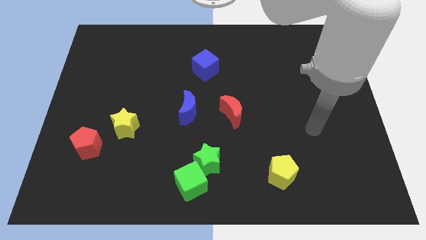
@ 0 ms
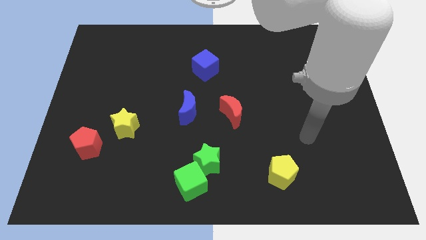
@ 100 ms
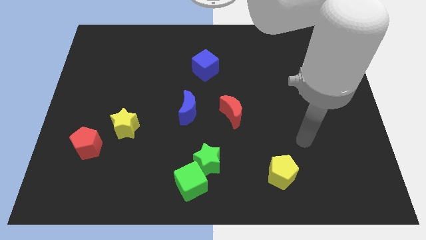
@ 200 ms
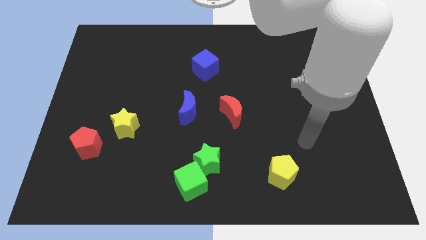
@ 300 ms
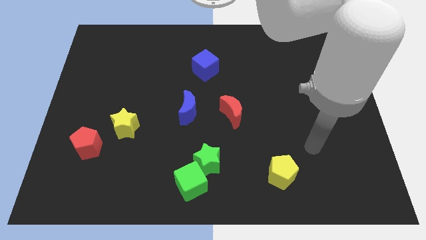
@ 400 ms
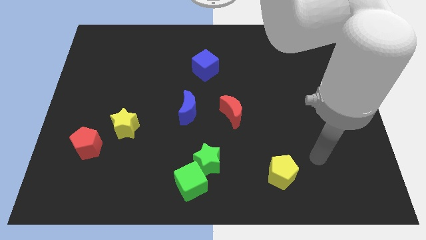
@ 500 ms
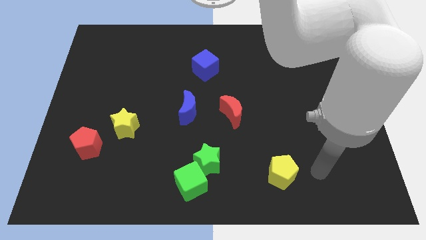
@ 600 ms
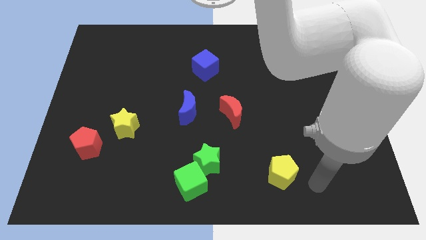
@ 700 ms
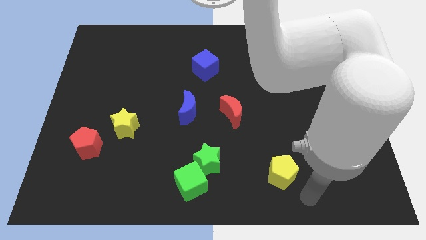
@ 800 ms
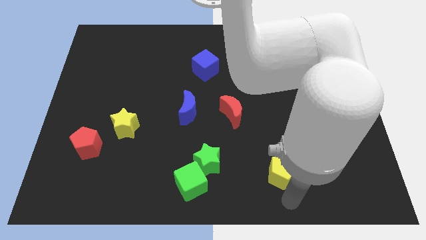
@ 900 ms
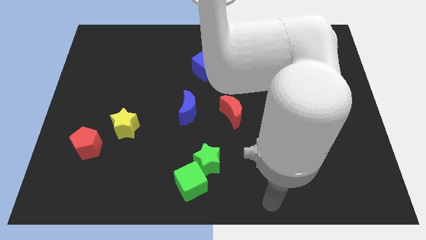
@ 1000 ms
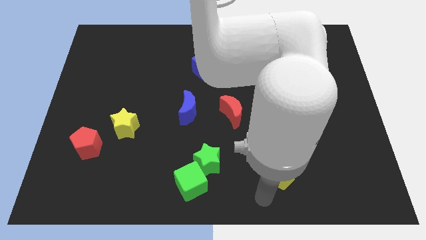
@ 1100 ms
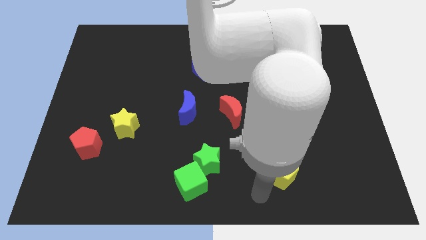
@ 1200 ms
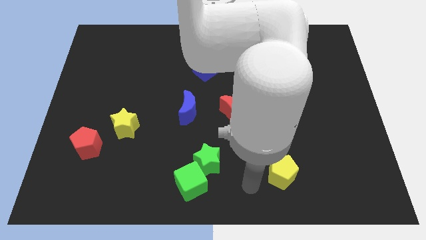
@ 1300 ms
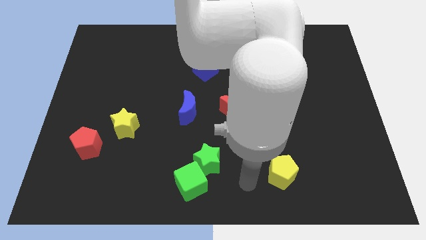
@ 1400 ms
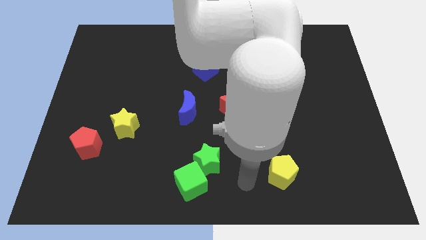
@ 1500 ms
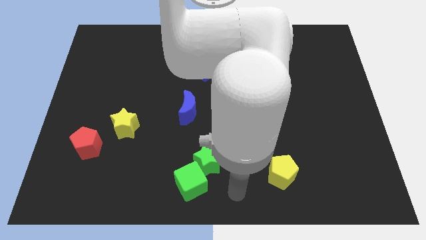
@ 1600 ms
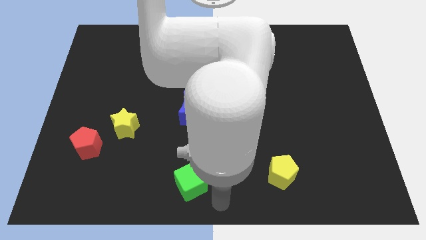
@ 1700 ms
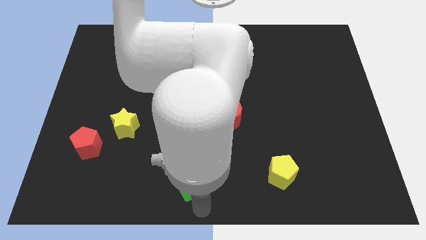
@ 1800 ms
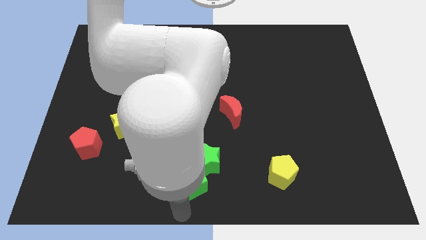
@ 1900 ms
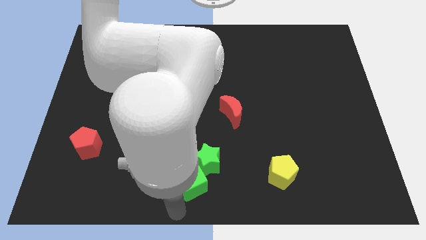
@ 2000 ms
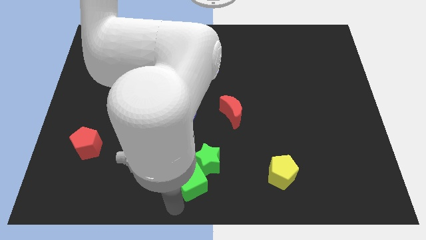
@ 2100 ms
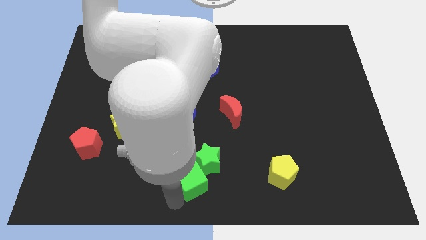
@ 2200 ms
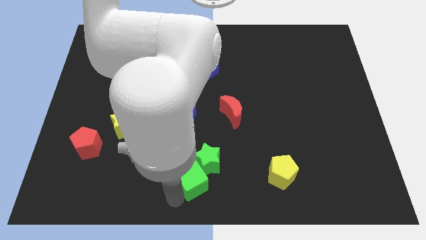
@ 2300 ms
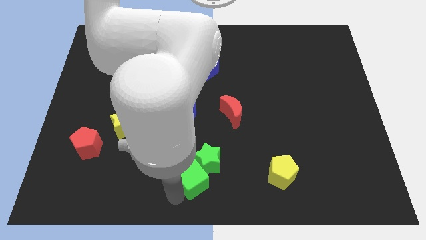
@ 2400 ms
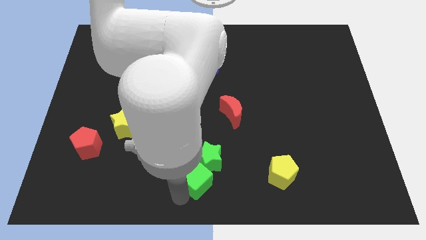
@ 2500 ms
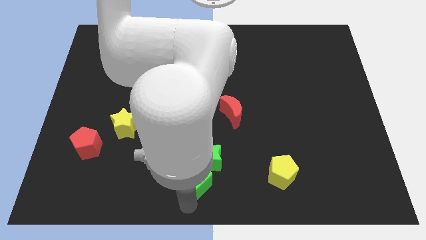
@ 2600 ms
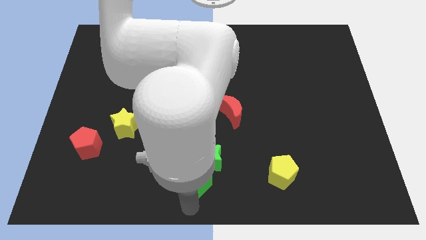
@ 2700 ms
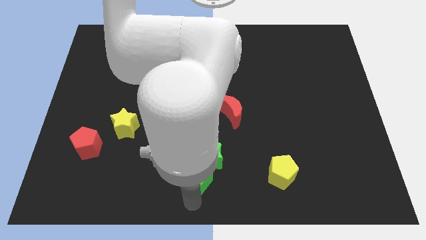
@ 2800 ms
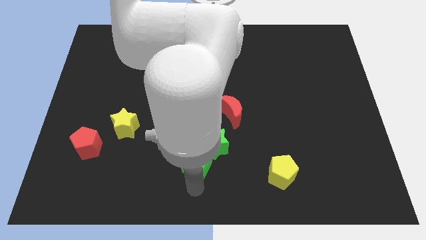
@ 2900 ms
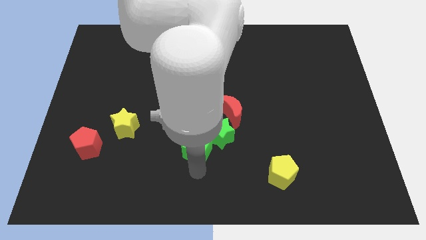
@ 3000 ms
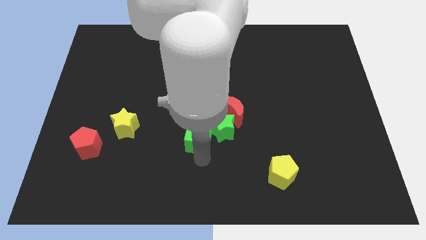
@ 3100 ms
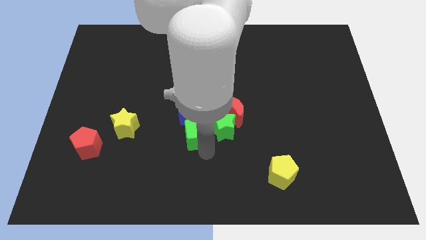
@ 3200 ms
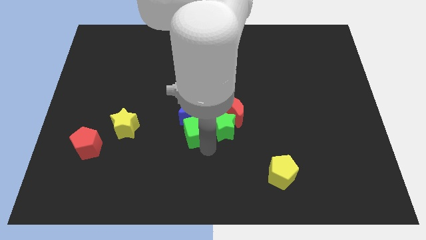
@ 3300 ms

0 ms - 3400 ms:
place the star below the red moon

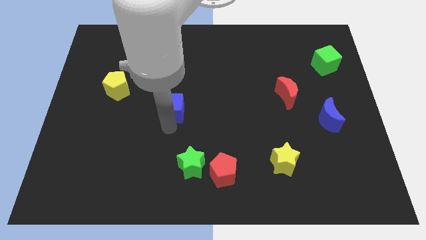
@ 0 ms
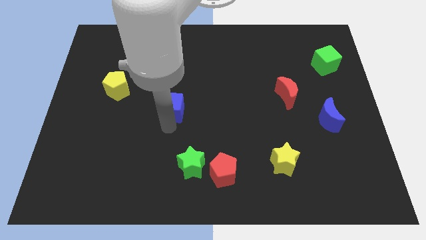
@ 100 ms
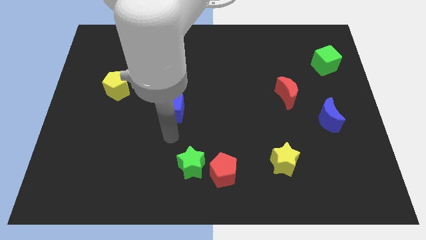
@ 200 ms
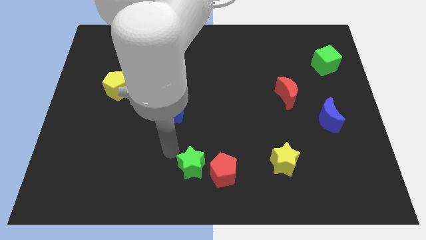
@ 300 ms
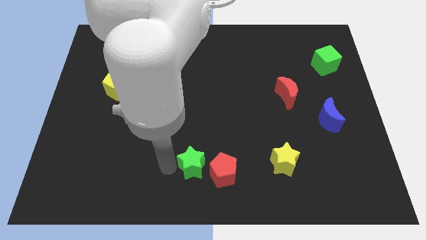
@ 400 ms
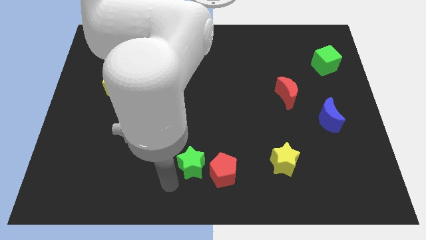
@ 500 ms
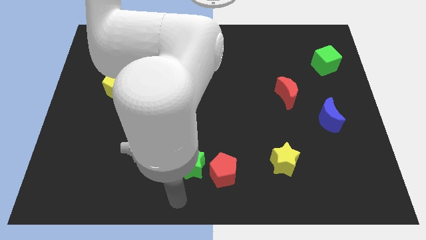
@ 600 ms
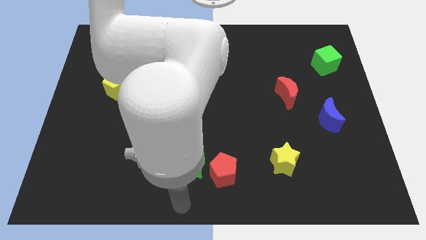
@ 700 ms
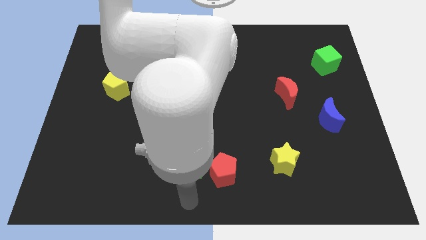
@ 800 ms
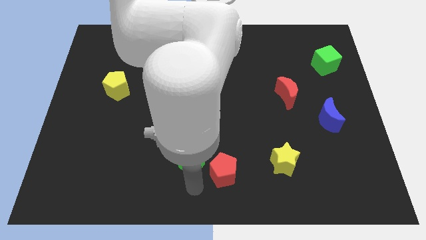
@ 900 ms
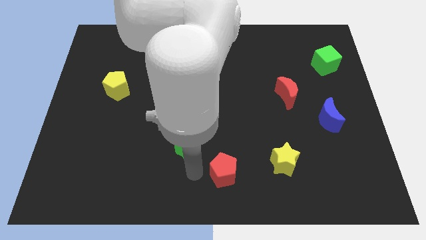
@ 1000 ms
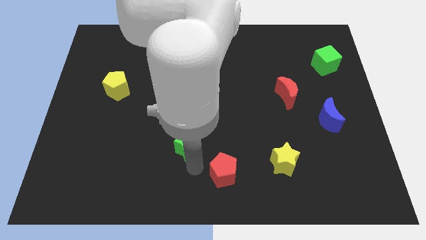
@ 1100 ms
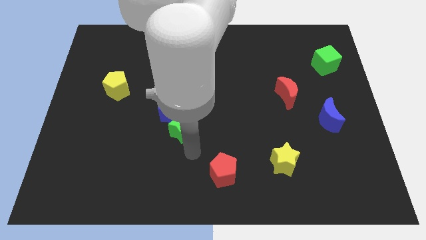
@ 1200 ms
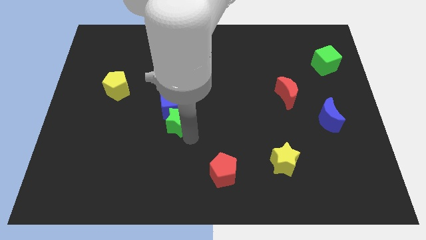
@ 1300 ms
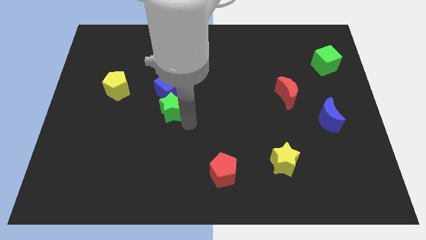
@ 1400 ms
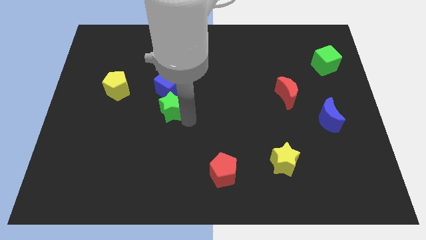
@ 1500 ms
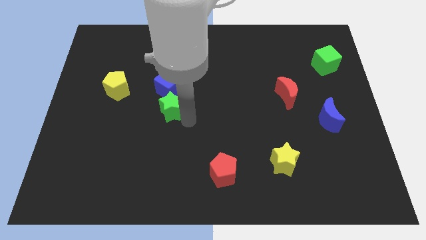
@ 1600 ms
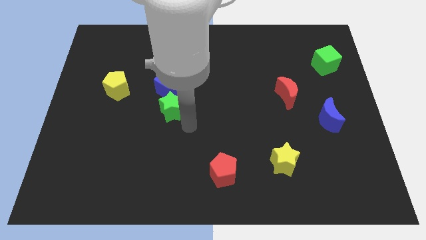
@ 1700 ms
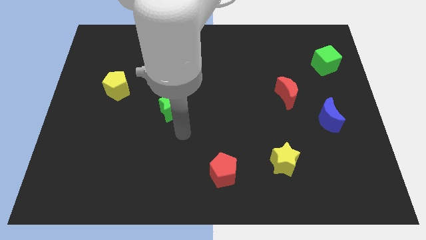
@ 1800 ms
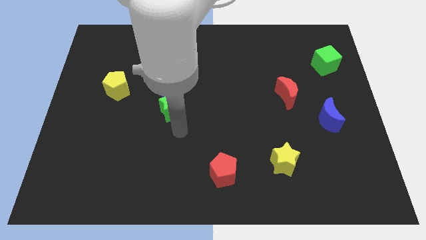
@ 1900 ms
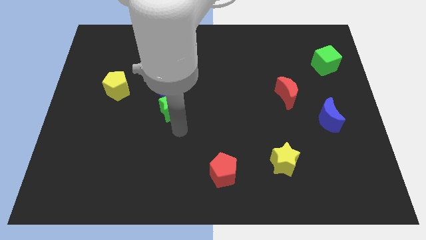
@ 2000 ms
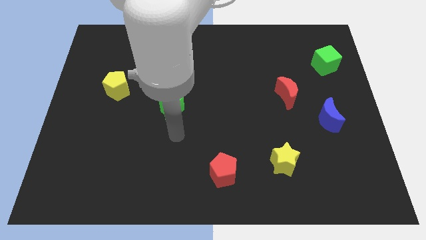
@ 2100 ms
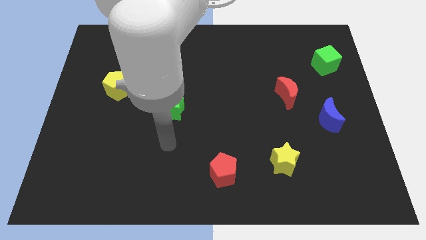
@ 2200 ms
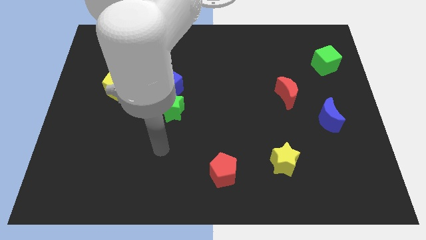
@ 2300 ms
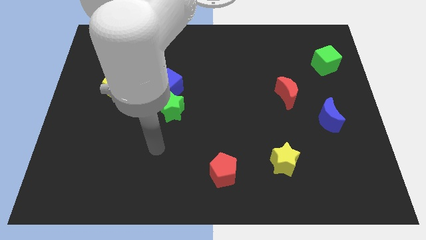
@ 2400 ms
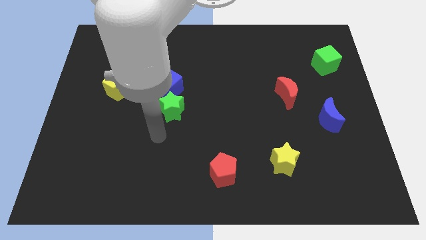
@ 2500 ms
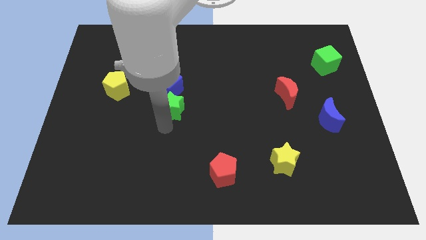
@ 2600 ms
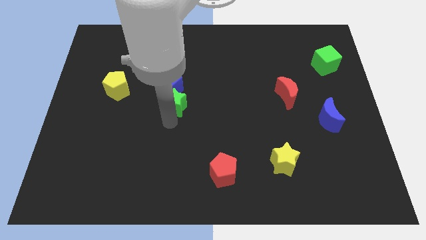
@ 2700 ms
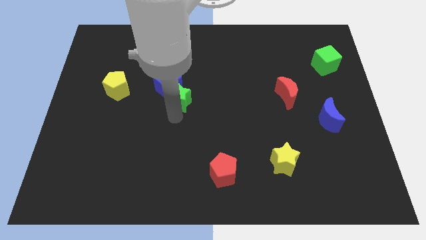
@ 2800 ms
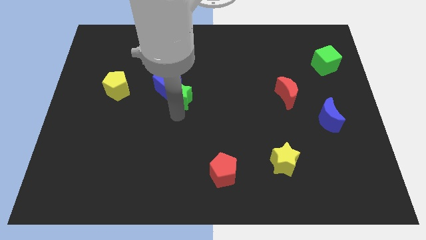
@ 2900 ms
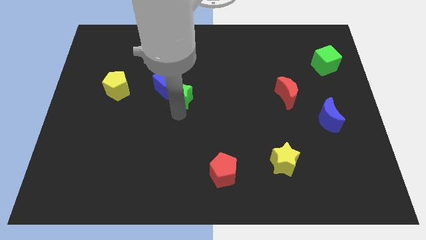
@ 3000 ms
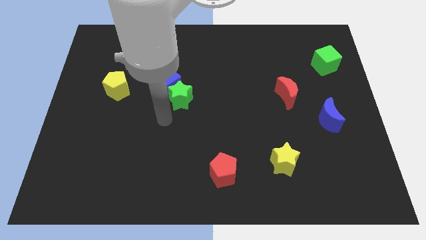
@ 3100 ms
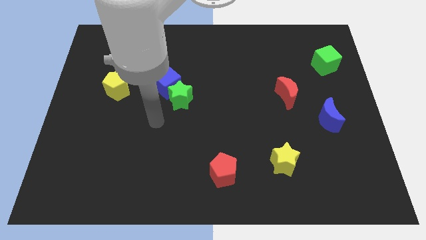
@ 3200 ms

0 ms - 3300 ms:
push the blue cube and green star towards the top side of the board

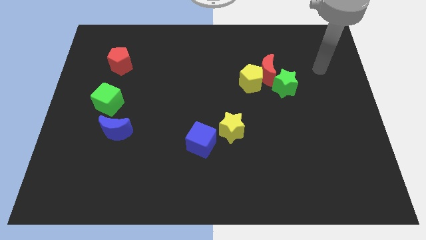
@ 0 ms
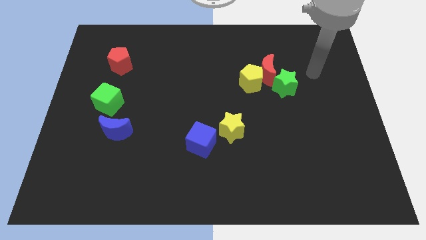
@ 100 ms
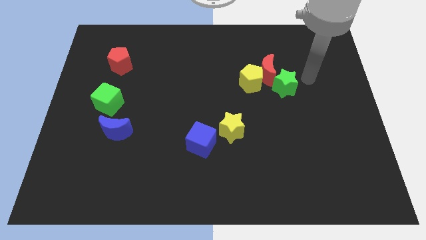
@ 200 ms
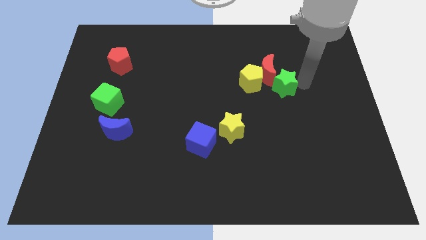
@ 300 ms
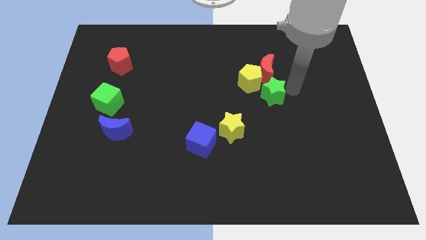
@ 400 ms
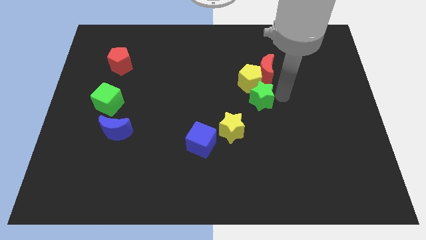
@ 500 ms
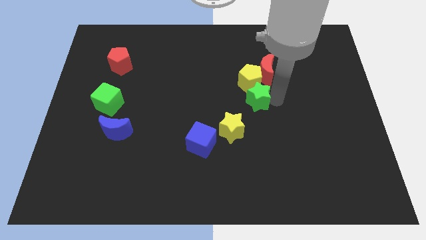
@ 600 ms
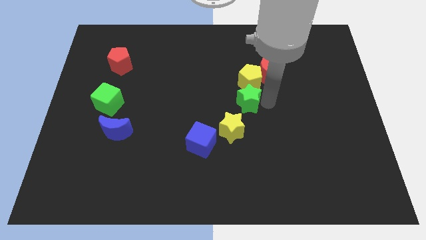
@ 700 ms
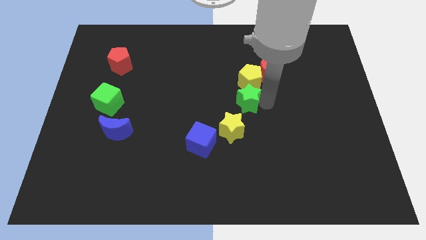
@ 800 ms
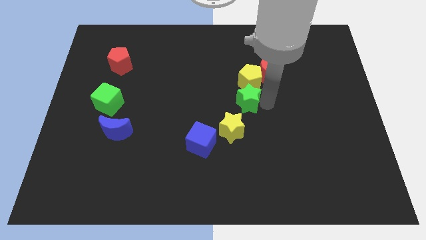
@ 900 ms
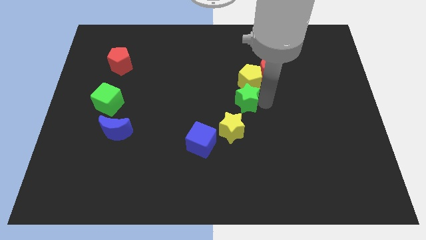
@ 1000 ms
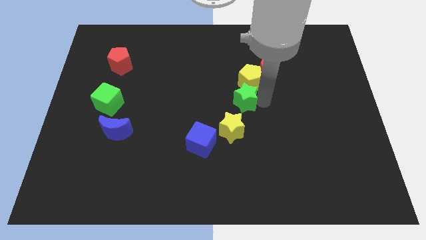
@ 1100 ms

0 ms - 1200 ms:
move the green star to the center of the board

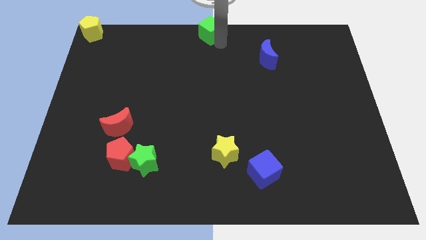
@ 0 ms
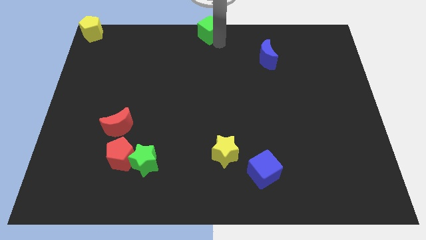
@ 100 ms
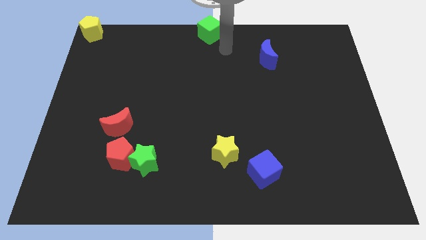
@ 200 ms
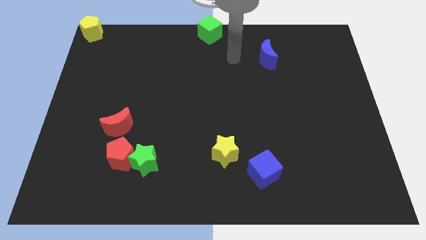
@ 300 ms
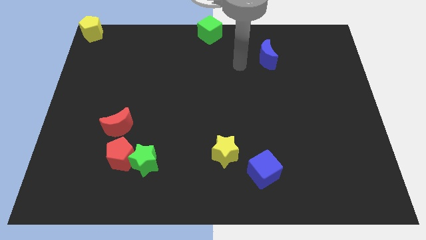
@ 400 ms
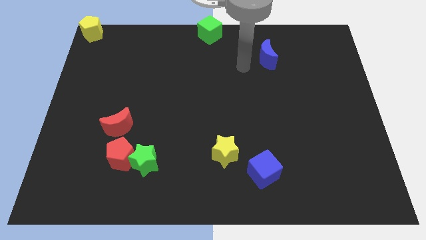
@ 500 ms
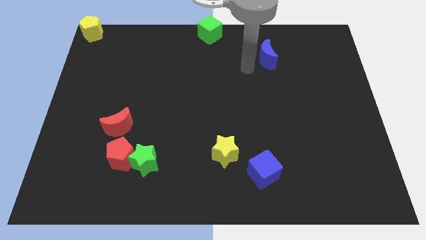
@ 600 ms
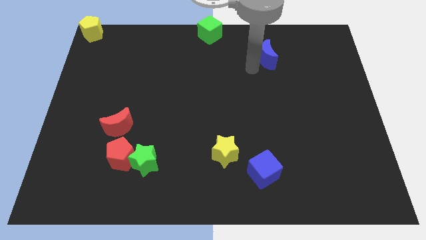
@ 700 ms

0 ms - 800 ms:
move the arm away from the green cube

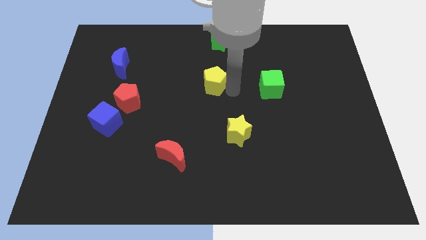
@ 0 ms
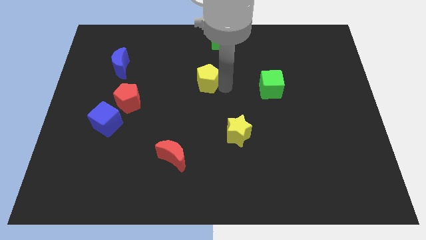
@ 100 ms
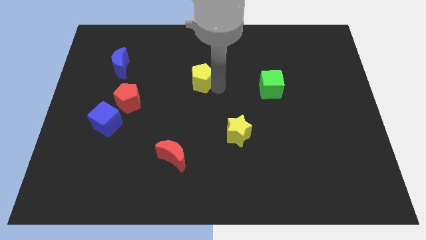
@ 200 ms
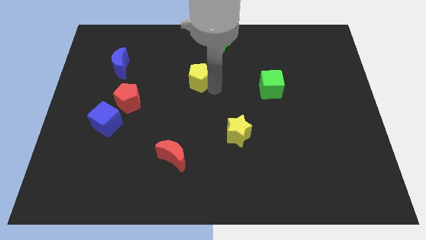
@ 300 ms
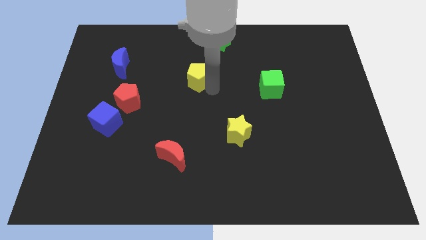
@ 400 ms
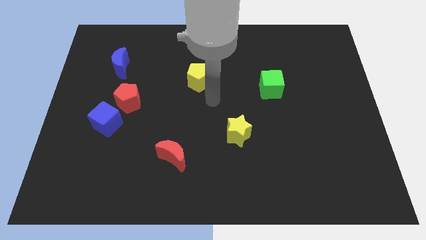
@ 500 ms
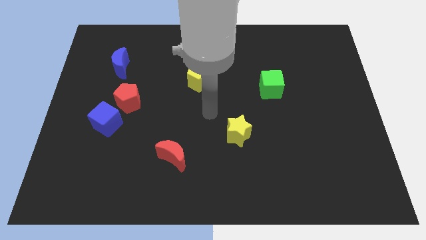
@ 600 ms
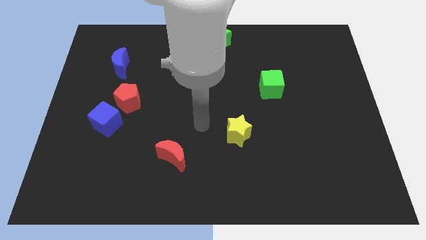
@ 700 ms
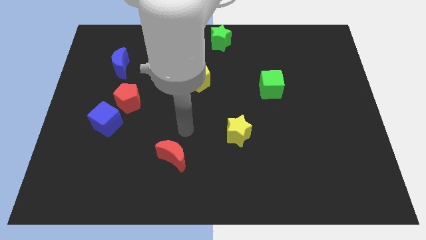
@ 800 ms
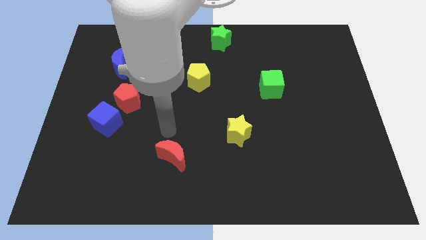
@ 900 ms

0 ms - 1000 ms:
move the yellow pentagon slightly towards left
